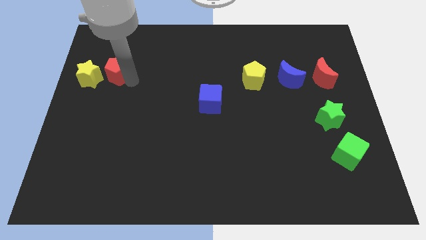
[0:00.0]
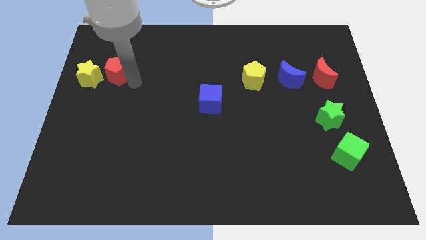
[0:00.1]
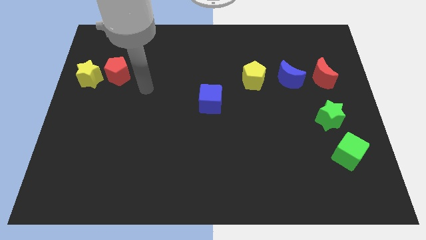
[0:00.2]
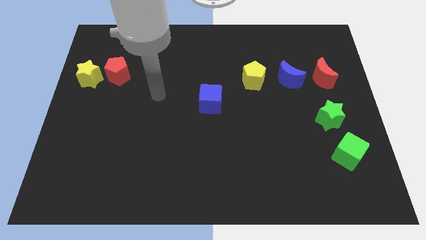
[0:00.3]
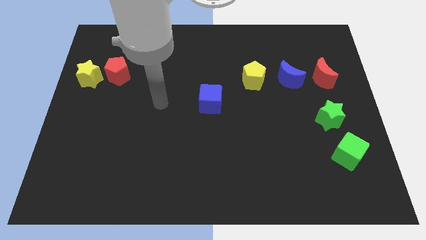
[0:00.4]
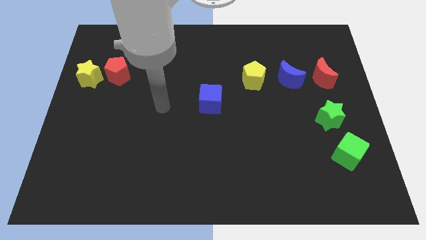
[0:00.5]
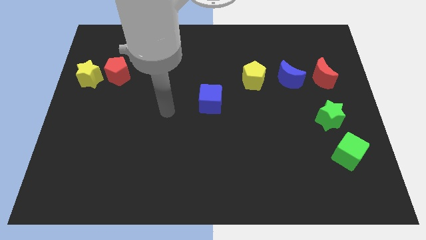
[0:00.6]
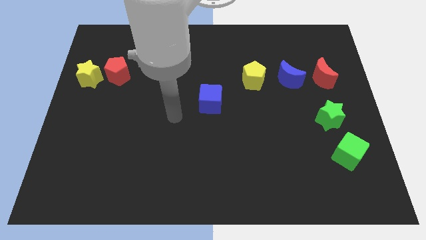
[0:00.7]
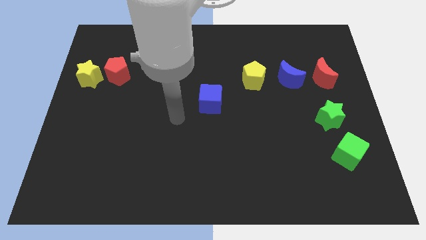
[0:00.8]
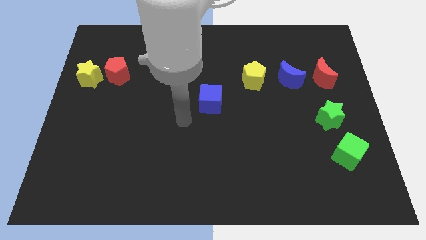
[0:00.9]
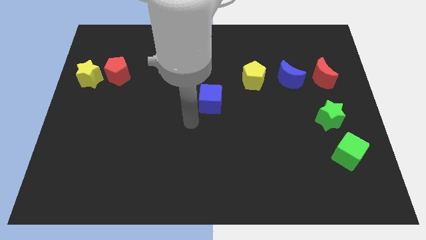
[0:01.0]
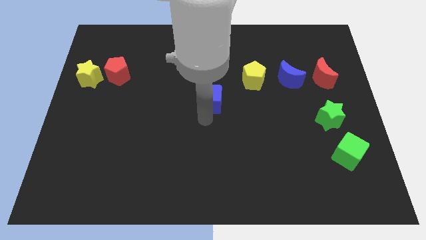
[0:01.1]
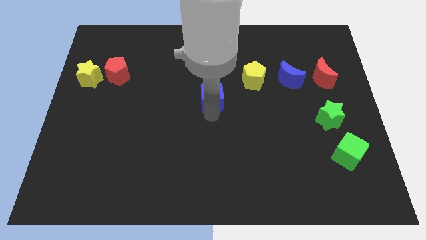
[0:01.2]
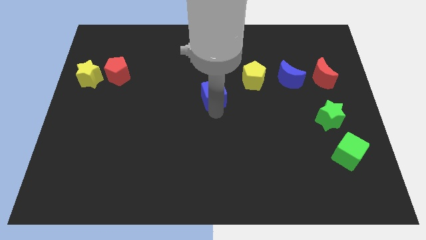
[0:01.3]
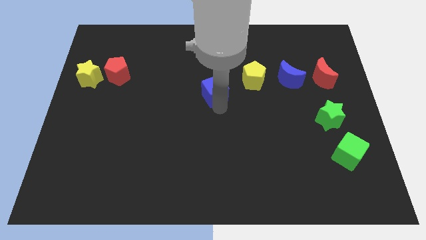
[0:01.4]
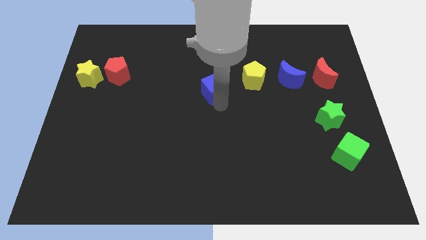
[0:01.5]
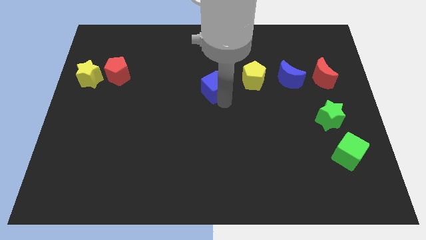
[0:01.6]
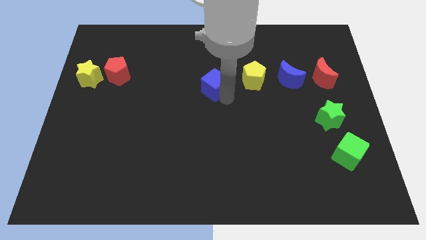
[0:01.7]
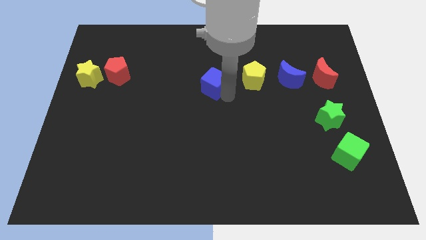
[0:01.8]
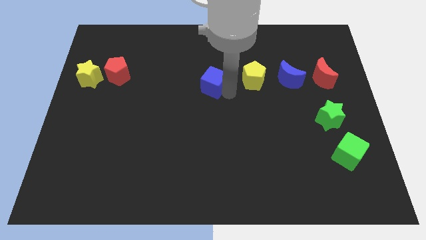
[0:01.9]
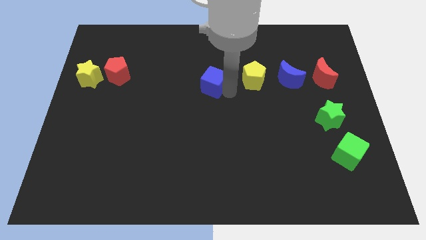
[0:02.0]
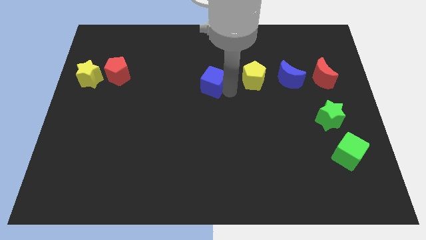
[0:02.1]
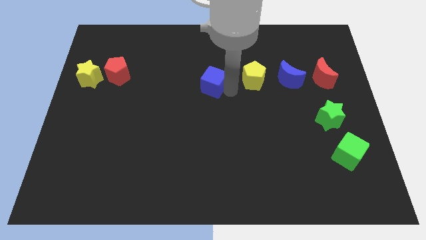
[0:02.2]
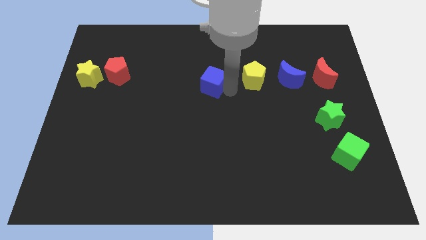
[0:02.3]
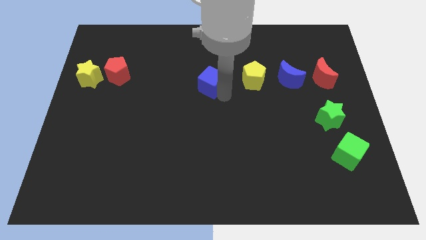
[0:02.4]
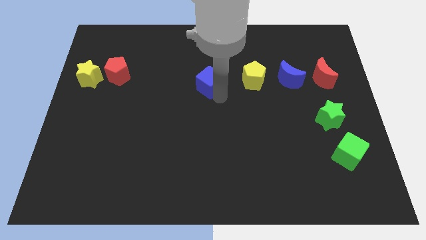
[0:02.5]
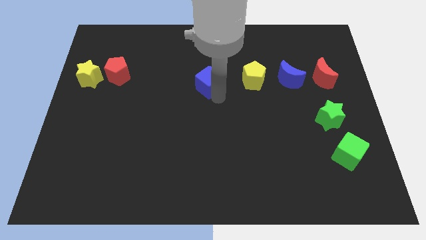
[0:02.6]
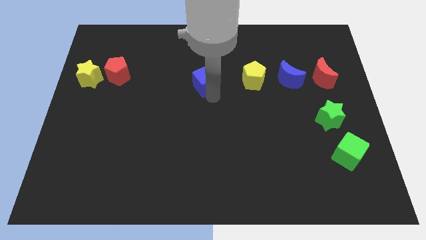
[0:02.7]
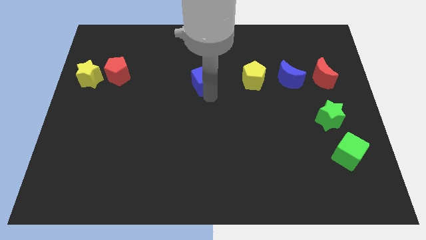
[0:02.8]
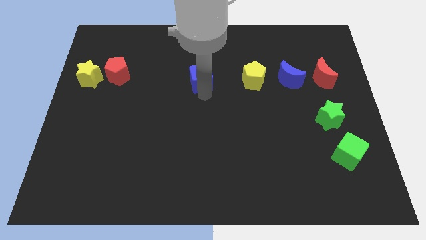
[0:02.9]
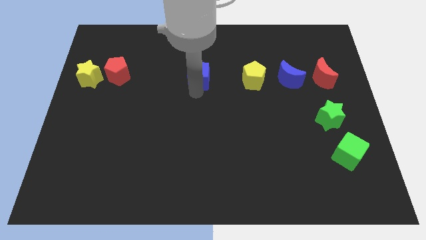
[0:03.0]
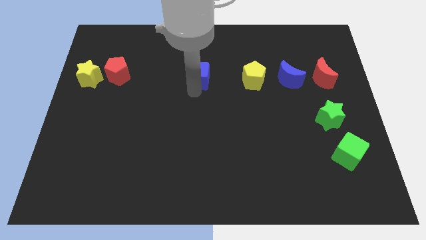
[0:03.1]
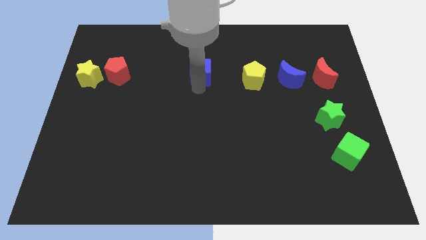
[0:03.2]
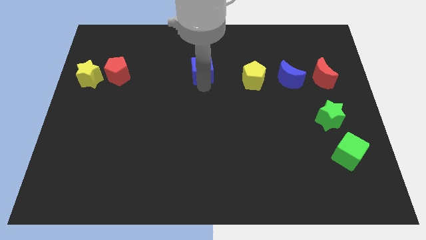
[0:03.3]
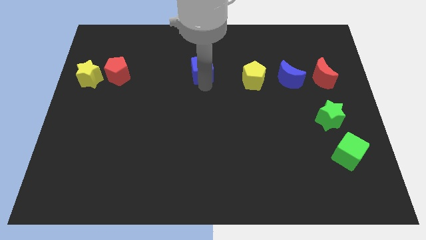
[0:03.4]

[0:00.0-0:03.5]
push the blue cube towards the top center of the board

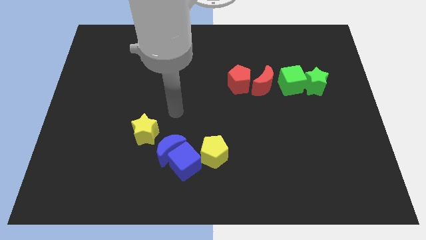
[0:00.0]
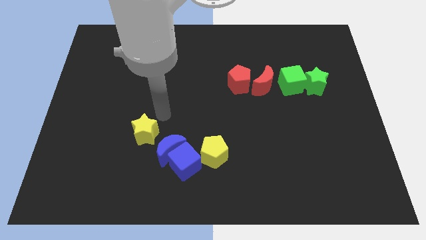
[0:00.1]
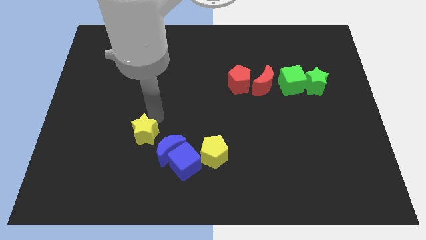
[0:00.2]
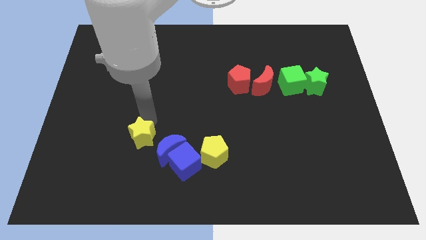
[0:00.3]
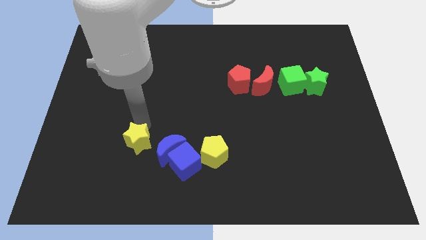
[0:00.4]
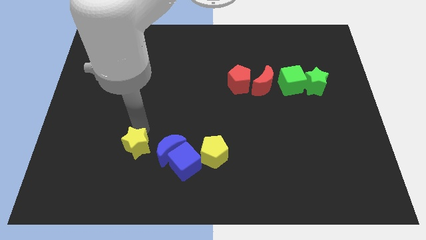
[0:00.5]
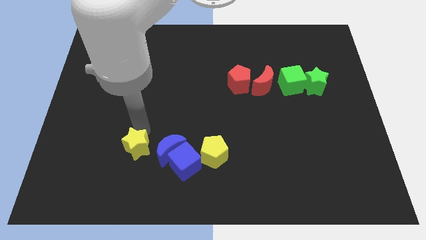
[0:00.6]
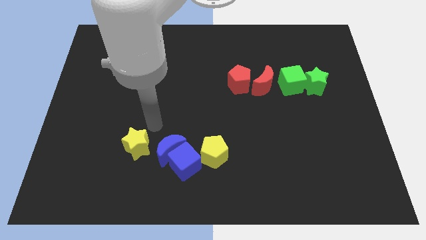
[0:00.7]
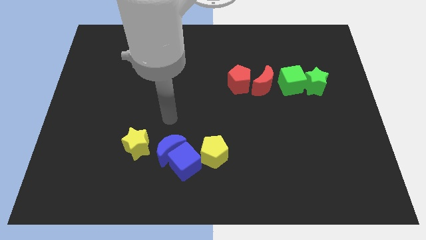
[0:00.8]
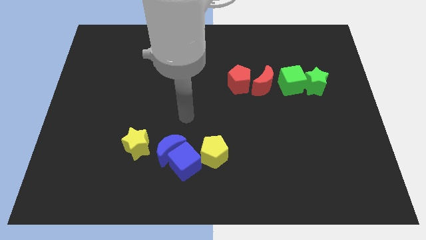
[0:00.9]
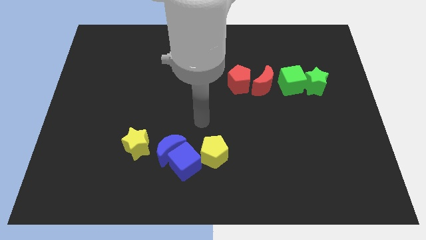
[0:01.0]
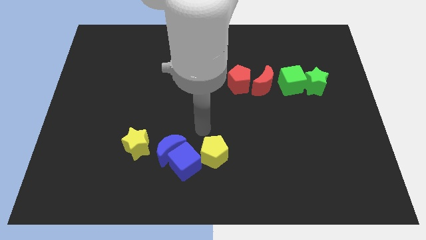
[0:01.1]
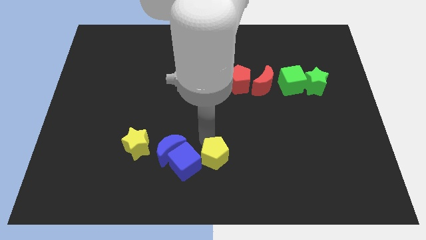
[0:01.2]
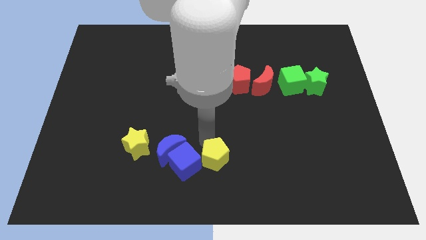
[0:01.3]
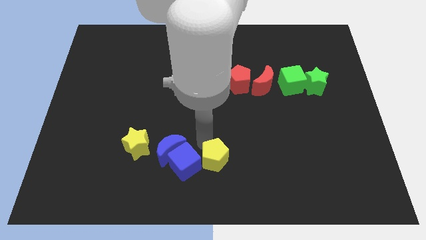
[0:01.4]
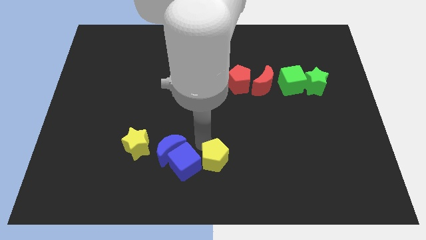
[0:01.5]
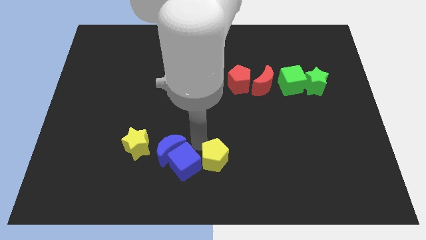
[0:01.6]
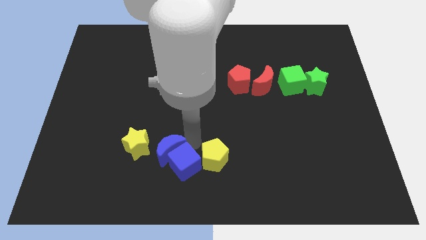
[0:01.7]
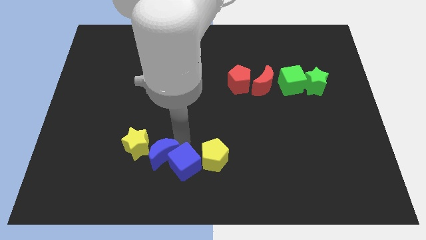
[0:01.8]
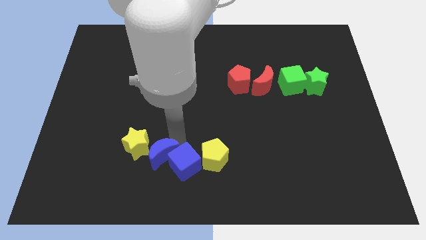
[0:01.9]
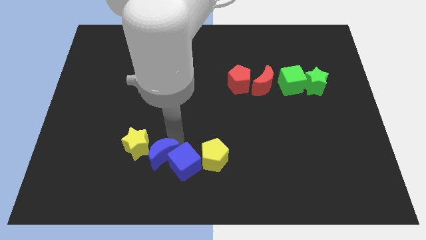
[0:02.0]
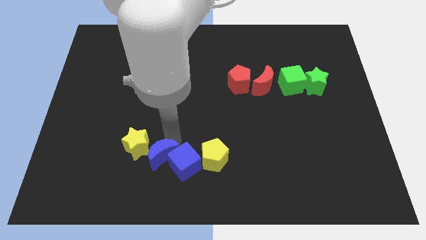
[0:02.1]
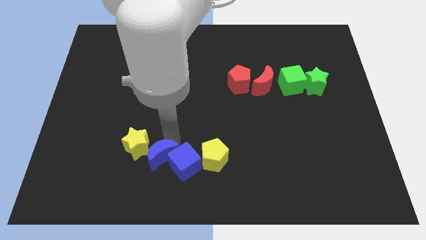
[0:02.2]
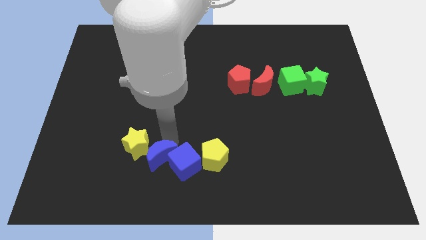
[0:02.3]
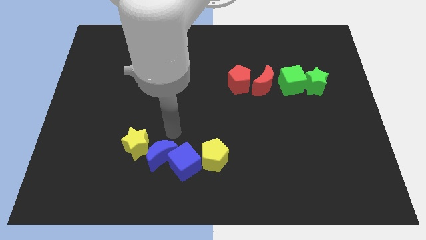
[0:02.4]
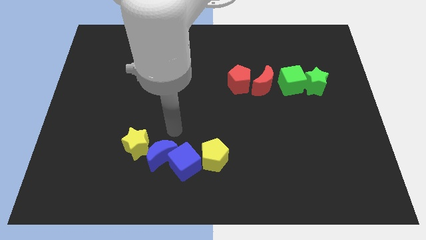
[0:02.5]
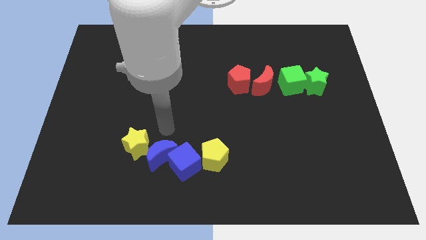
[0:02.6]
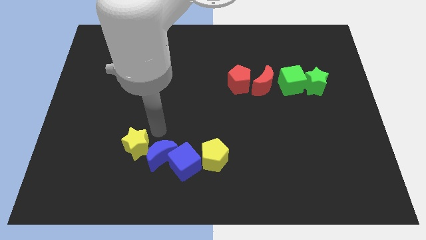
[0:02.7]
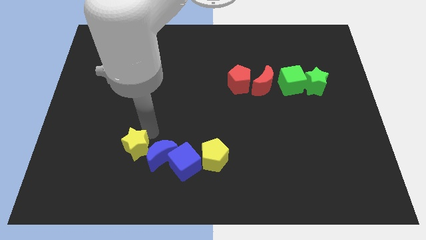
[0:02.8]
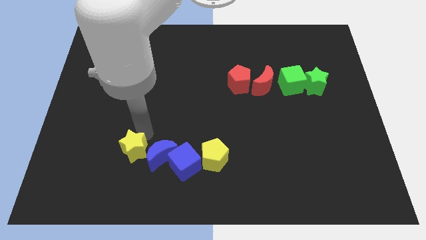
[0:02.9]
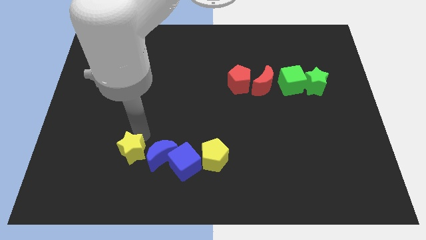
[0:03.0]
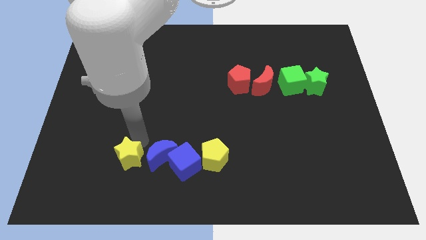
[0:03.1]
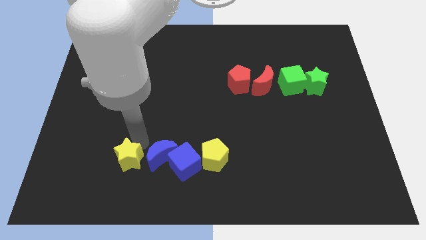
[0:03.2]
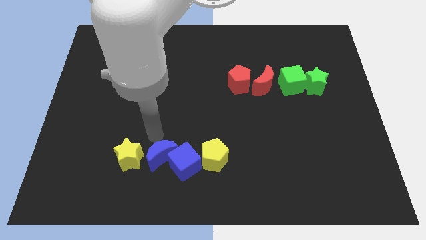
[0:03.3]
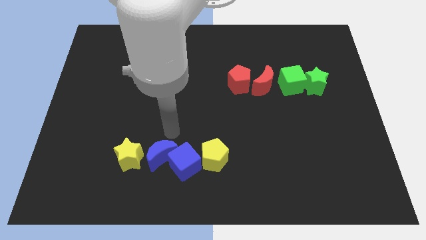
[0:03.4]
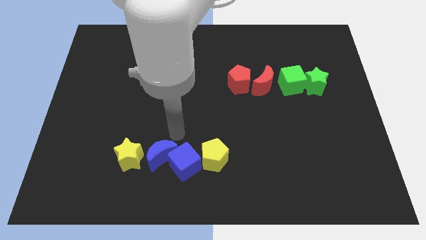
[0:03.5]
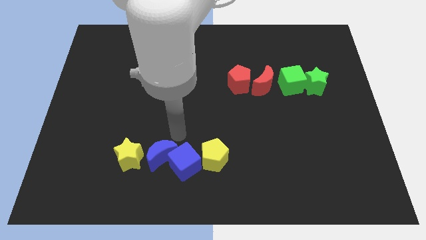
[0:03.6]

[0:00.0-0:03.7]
place yellow star to the left of the blue moon

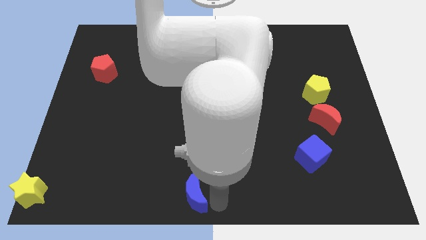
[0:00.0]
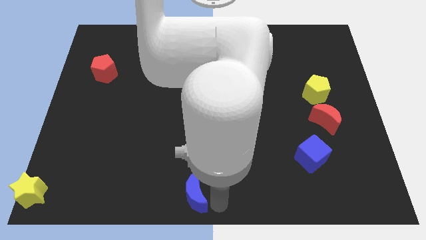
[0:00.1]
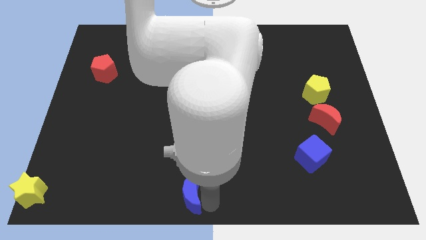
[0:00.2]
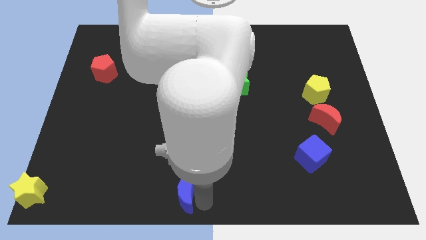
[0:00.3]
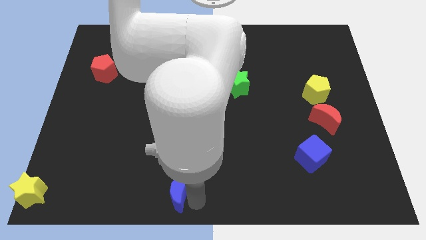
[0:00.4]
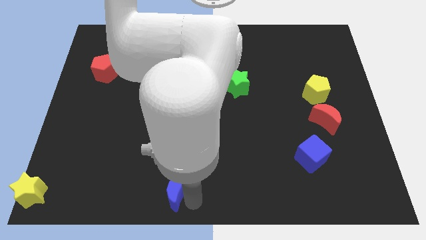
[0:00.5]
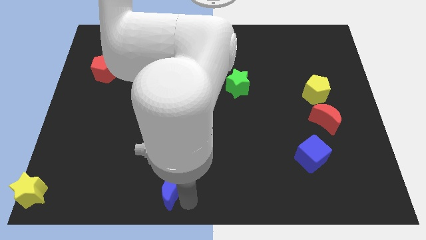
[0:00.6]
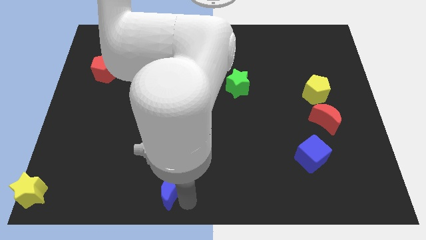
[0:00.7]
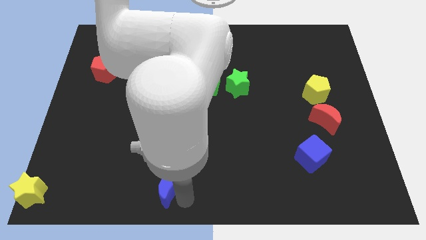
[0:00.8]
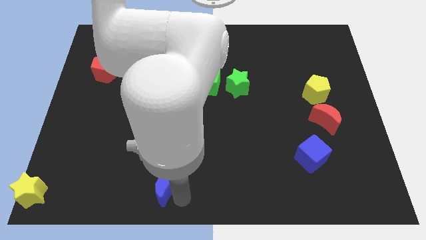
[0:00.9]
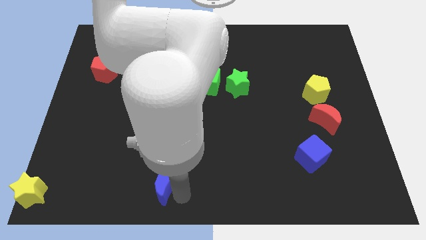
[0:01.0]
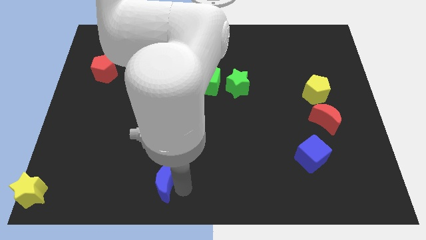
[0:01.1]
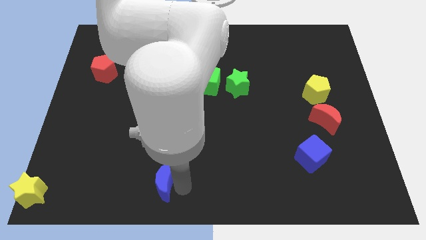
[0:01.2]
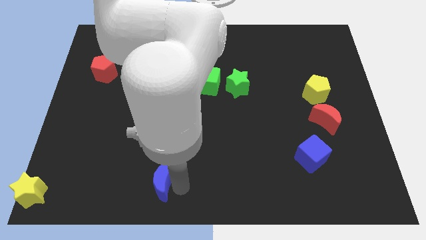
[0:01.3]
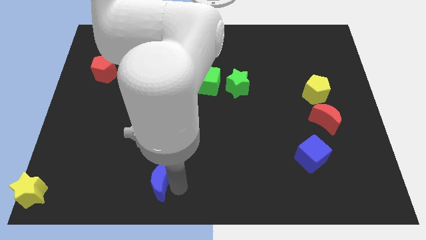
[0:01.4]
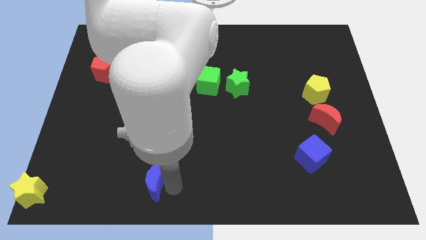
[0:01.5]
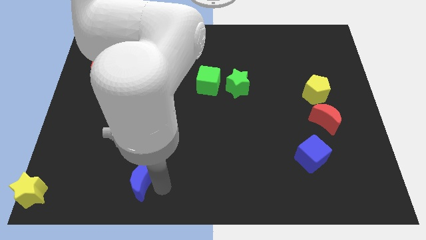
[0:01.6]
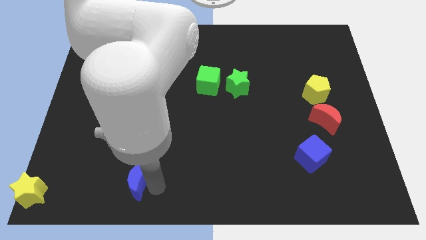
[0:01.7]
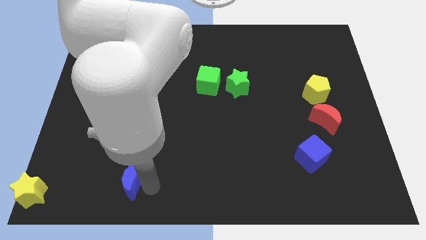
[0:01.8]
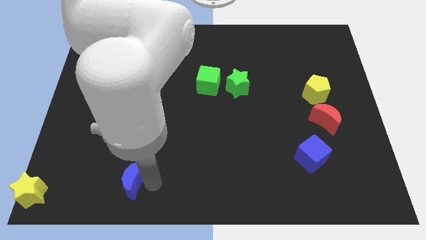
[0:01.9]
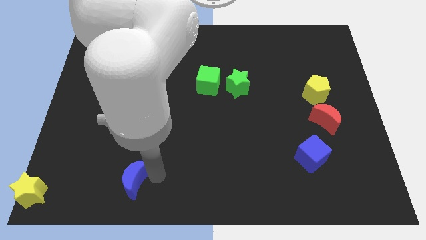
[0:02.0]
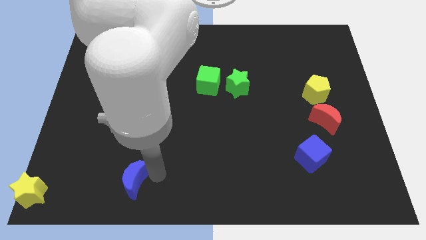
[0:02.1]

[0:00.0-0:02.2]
move the blue moon towards the yellow star
